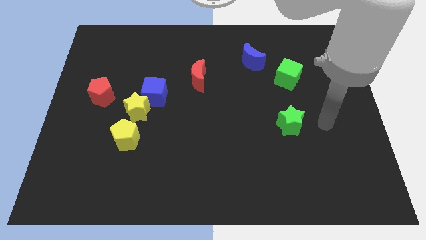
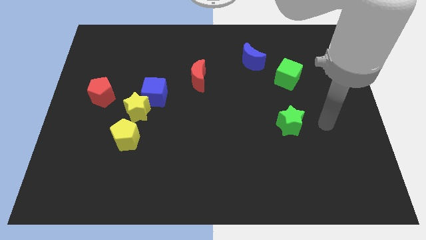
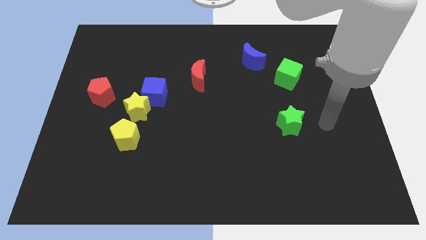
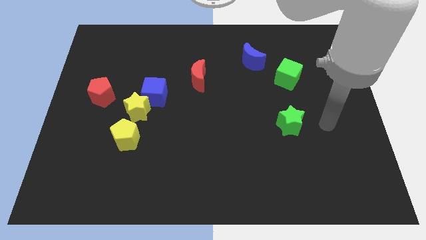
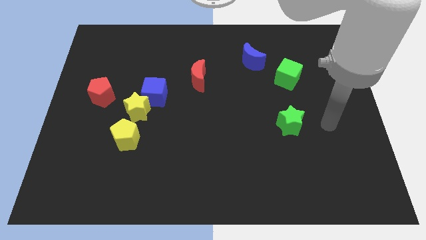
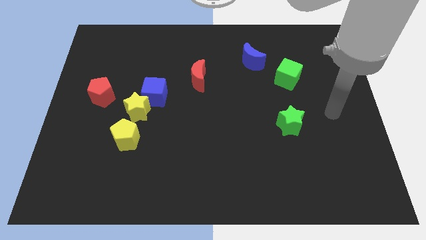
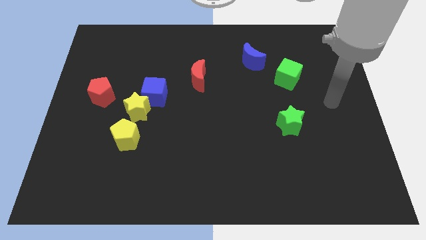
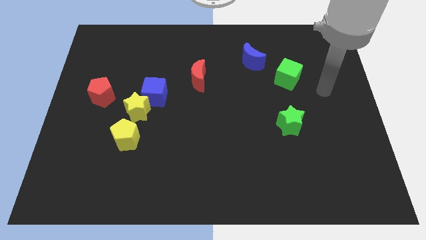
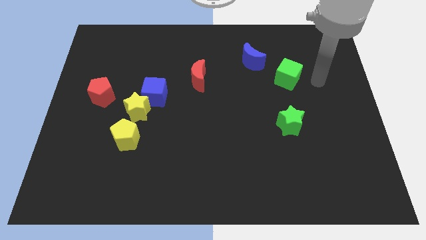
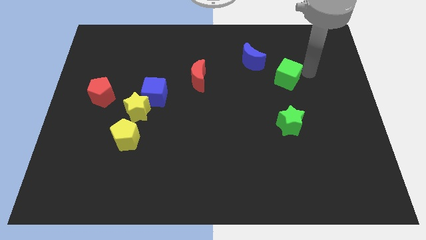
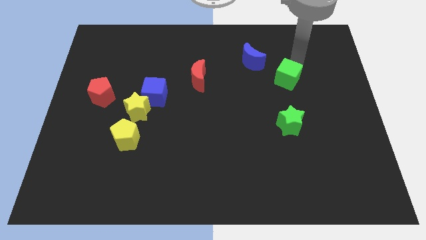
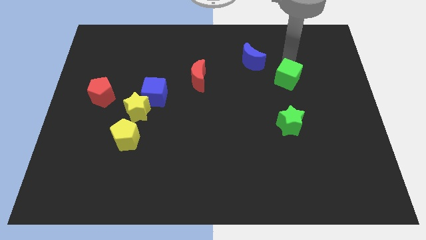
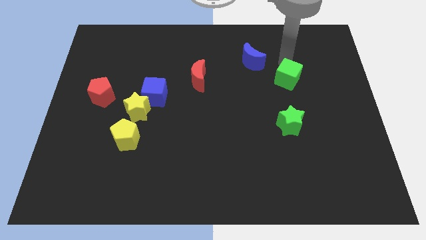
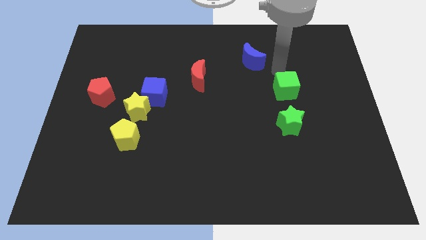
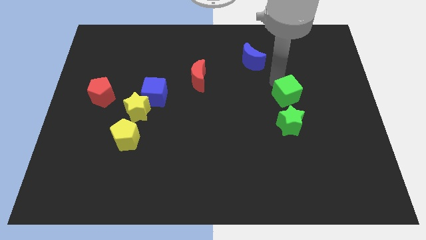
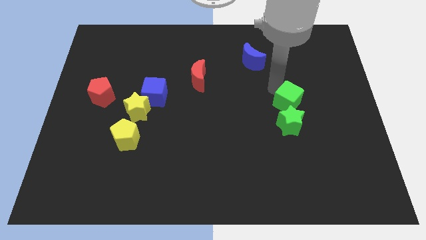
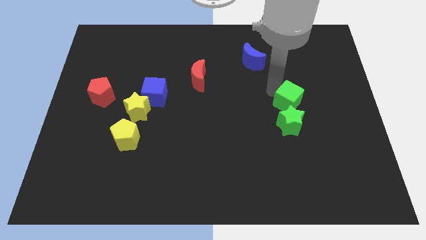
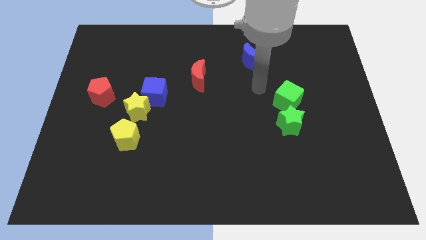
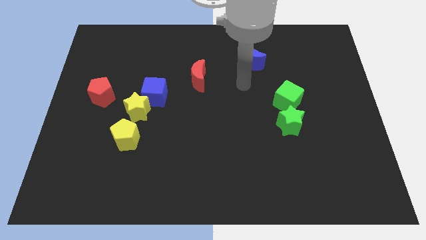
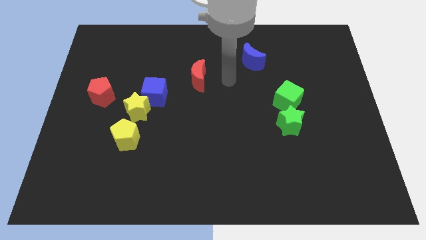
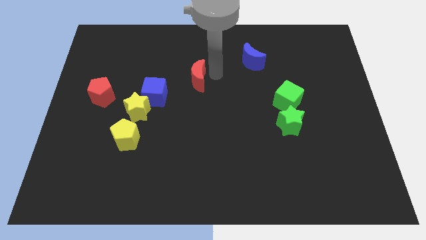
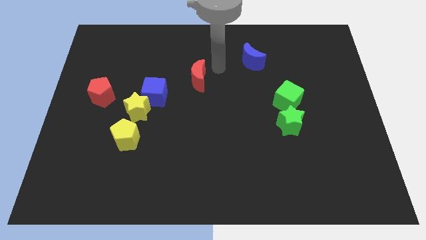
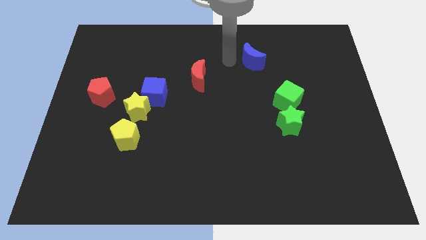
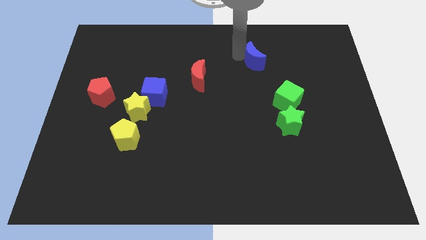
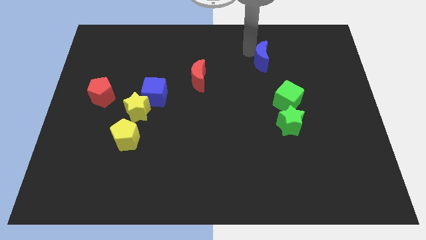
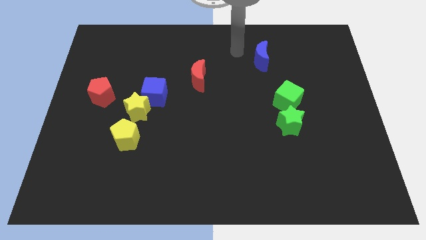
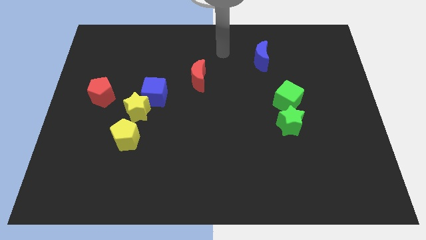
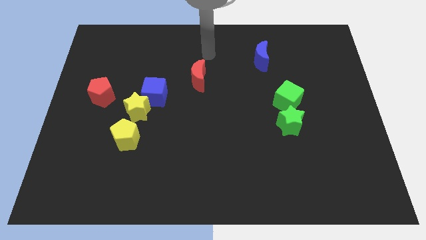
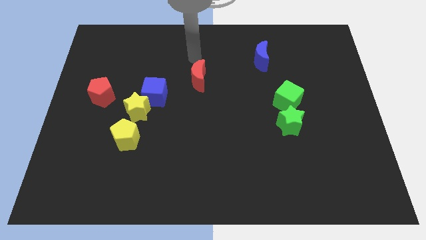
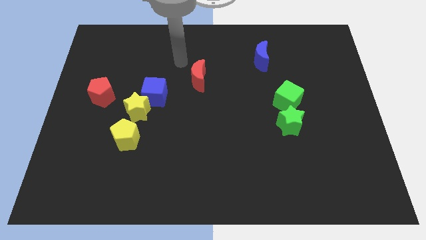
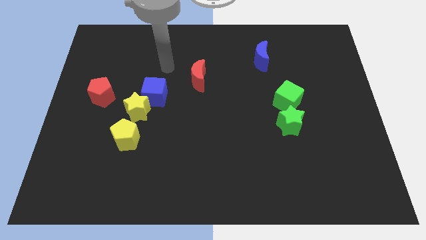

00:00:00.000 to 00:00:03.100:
move the green cube towards the green star

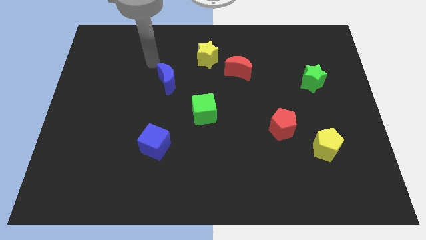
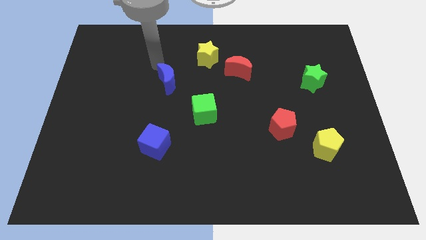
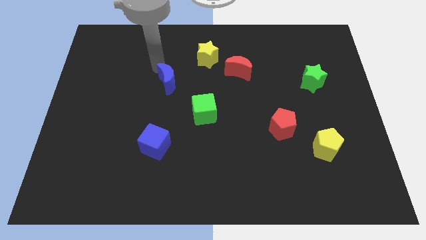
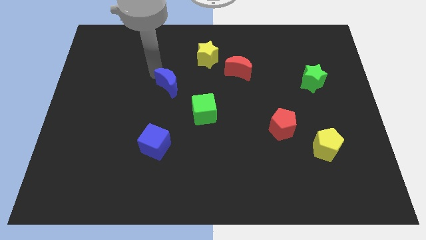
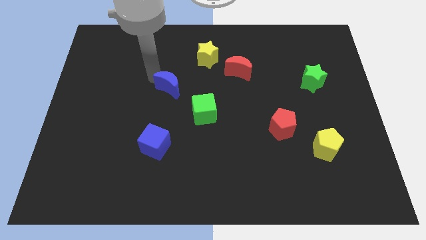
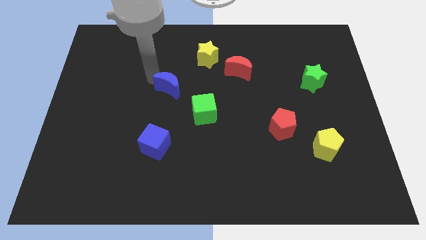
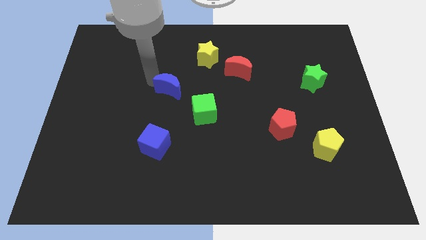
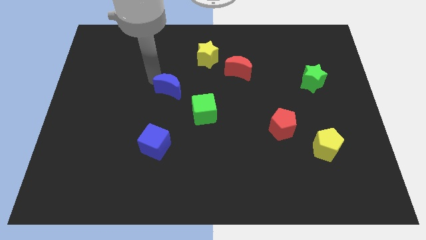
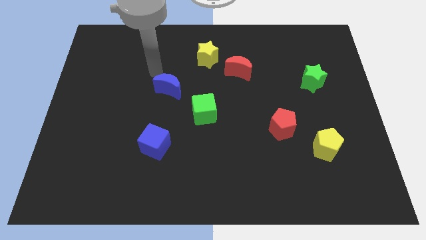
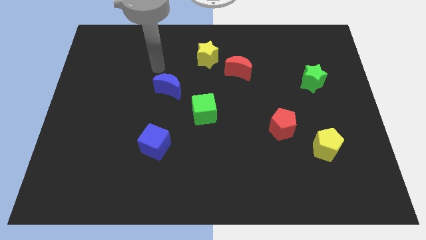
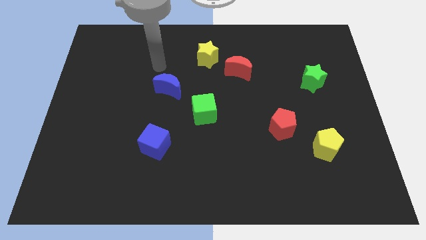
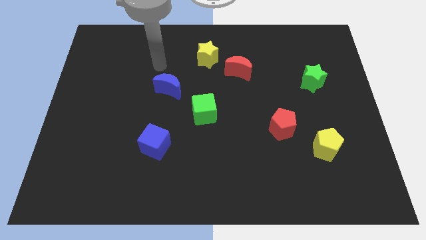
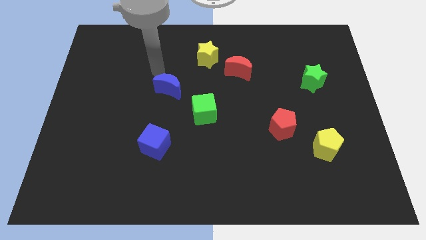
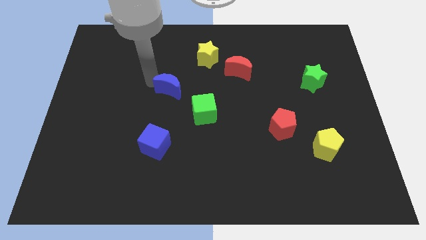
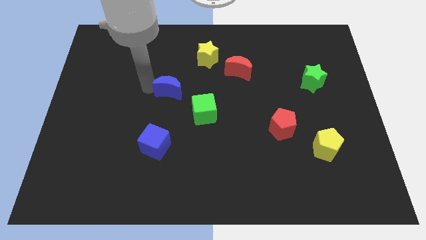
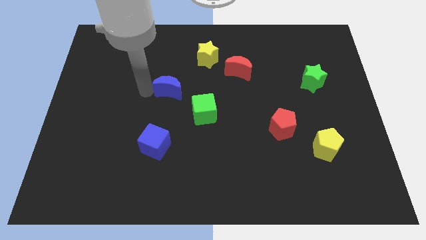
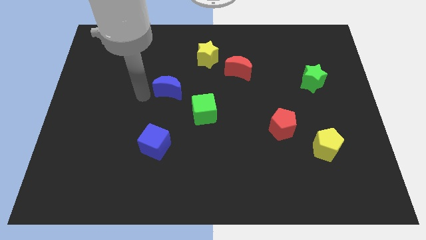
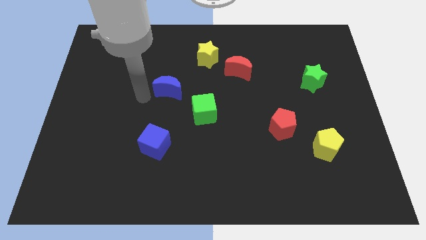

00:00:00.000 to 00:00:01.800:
place the blue semicircle to the top left of the green cube

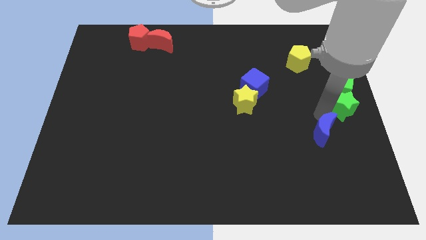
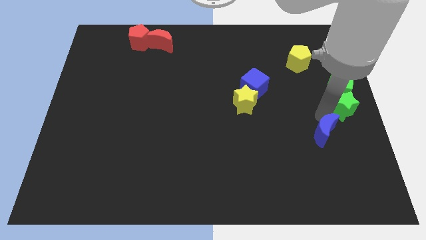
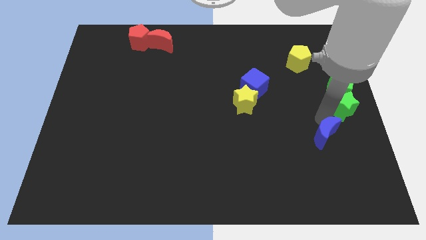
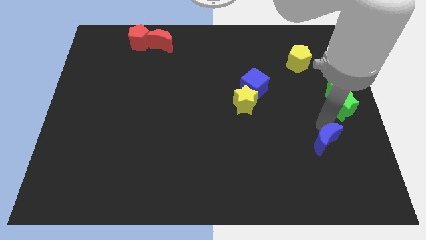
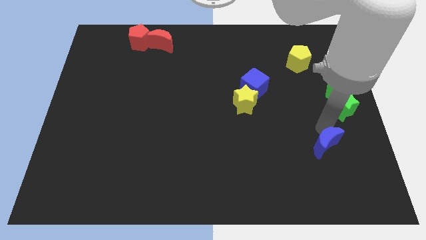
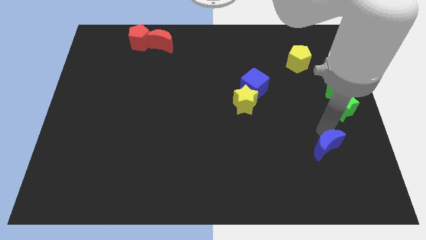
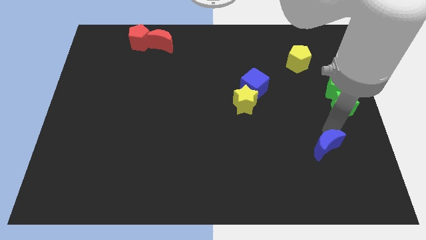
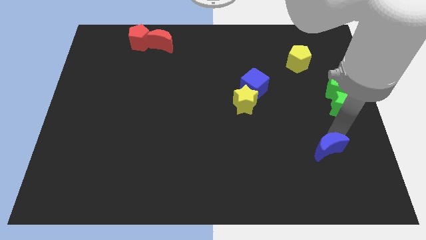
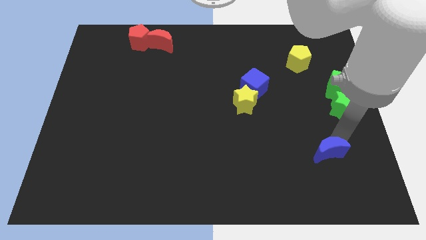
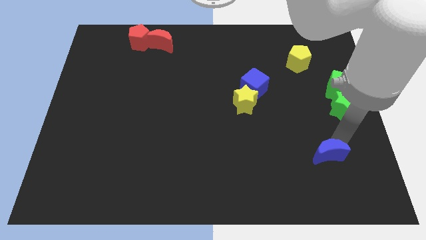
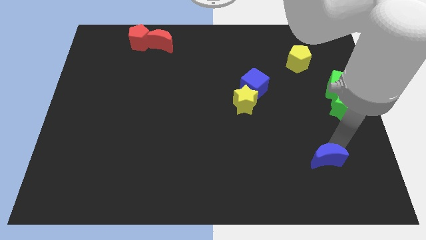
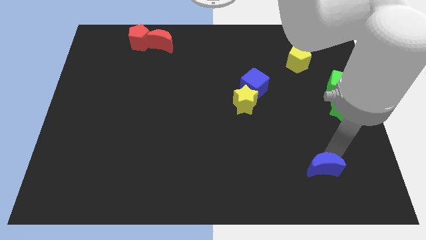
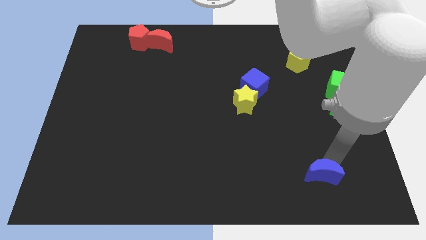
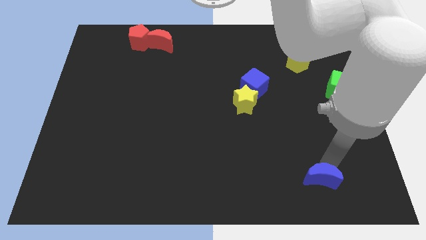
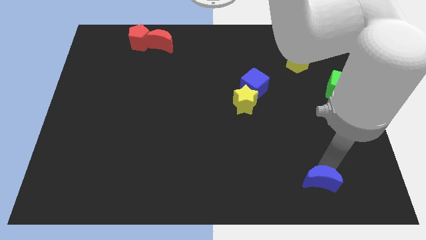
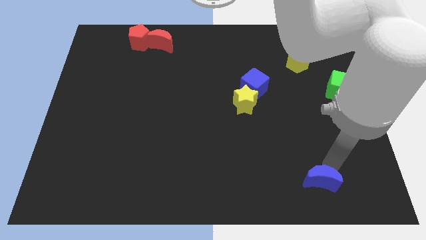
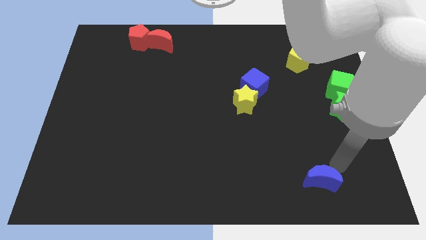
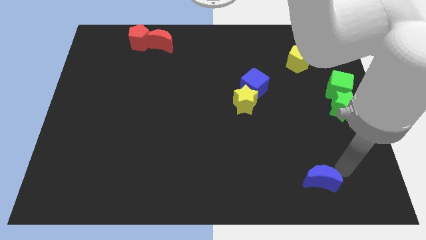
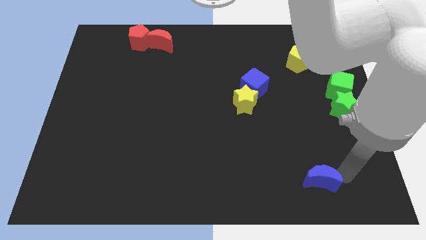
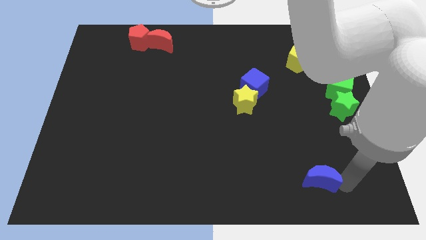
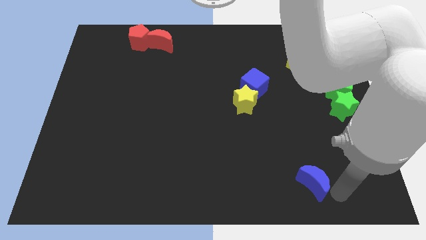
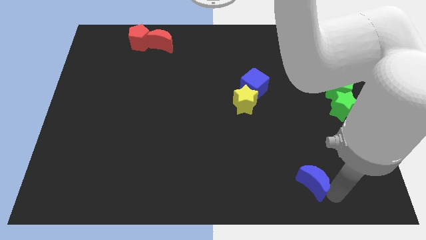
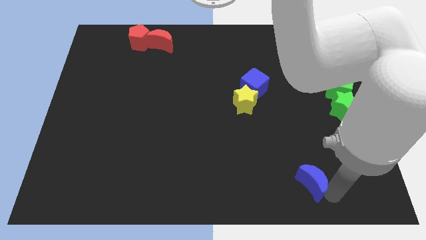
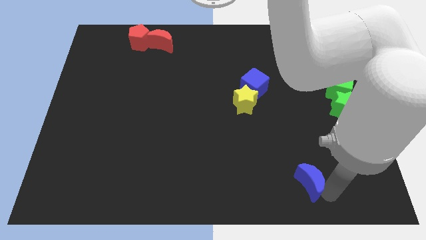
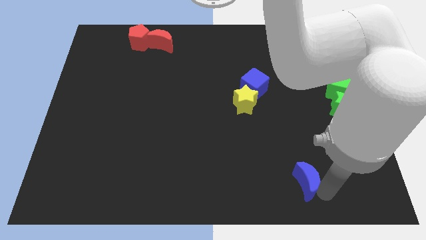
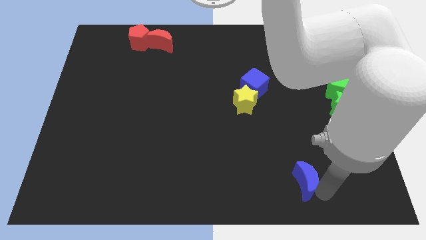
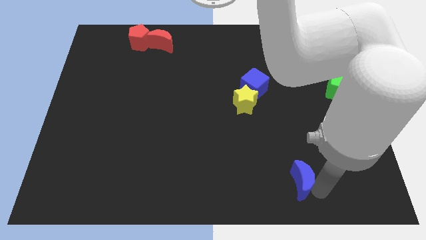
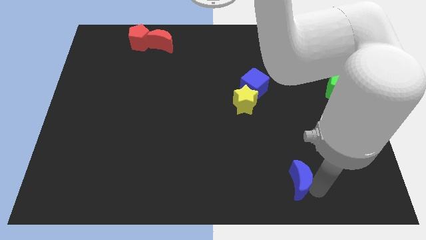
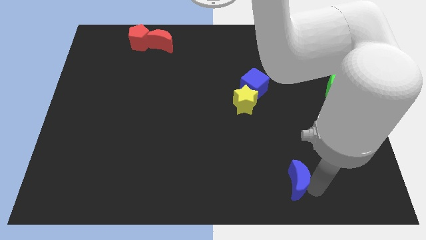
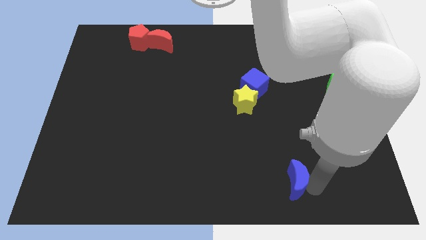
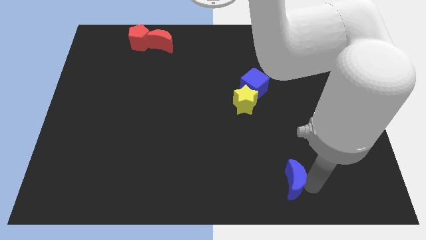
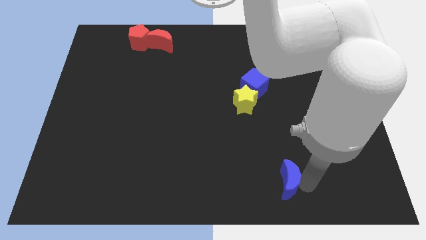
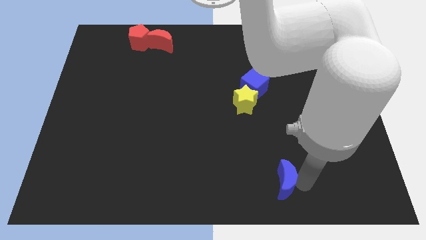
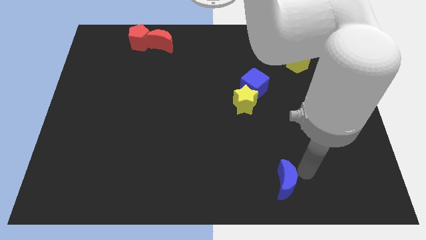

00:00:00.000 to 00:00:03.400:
separate blue moon from the green star

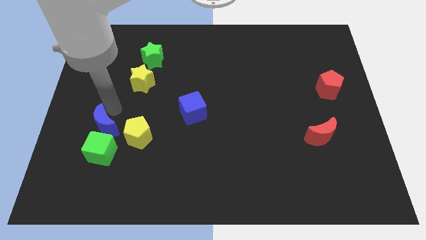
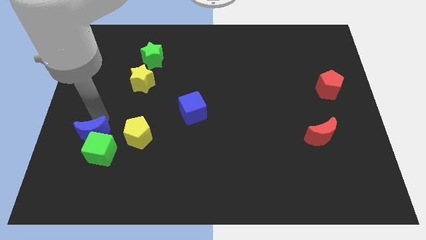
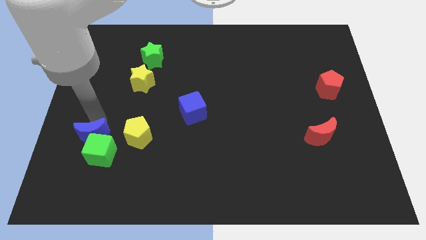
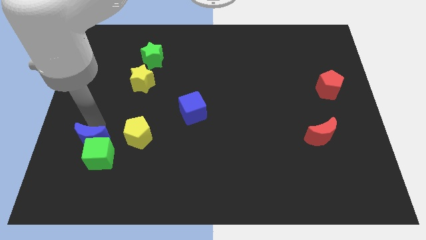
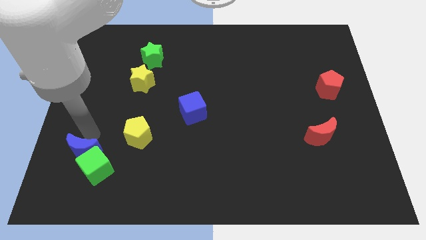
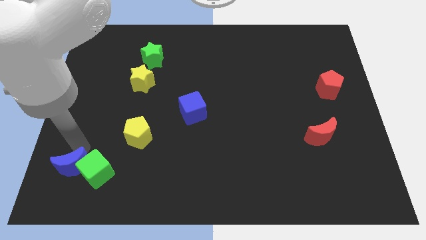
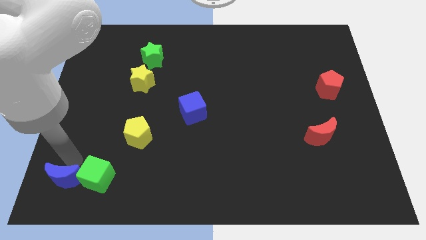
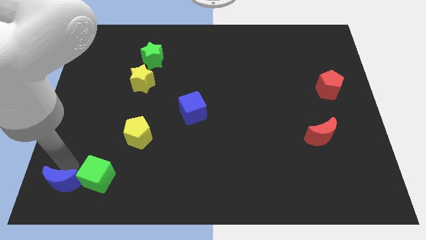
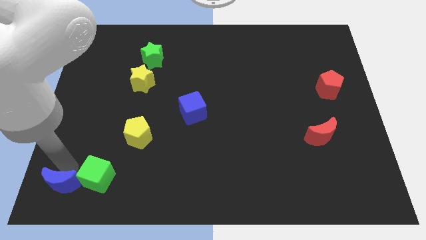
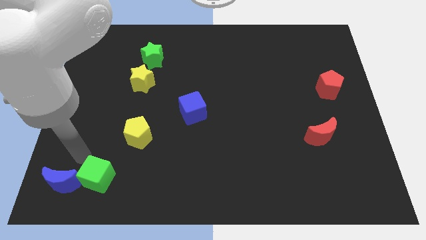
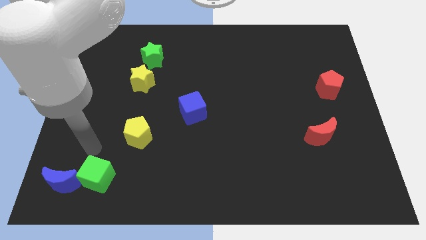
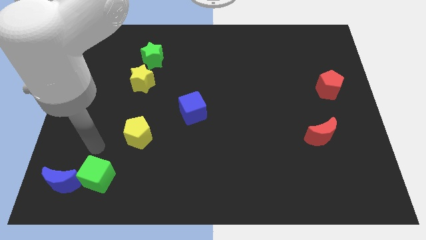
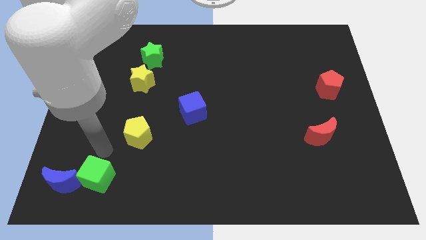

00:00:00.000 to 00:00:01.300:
put the blue moon parallel left to the green cube
